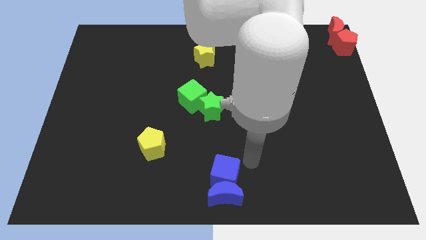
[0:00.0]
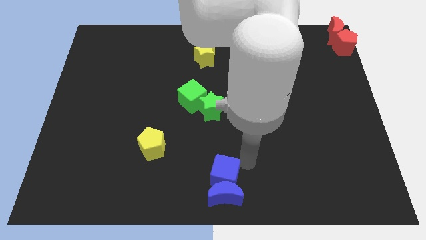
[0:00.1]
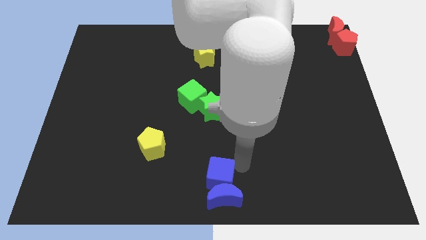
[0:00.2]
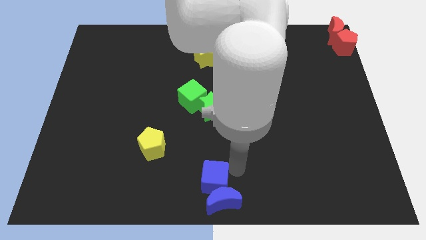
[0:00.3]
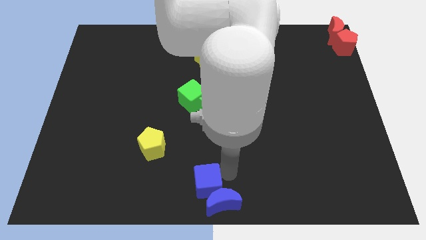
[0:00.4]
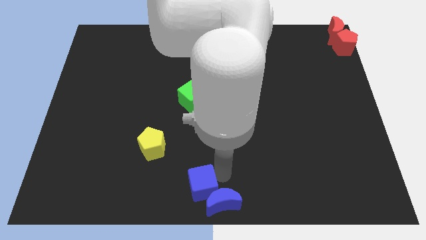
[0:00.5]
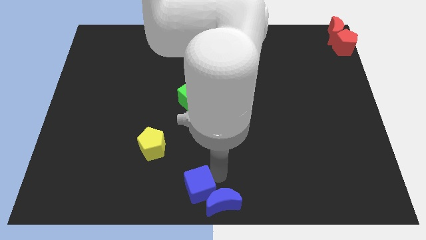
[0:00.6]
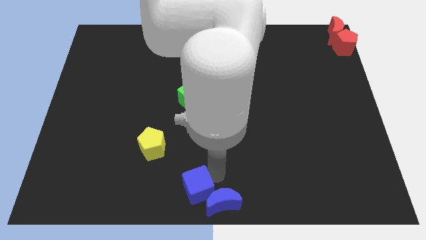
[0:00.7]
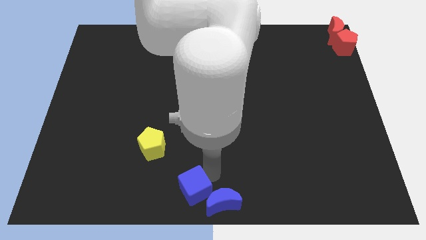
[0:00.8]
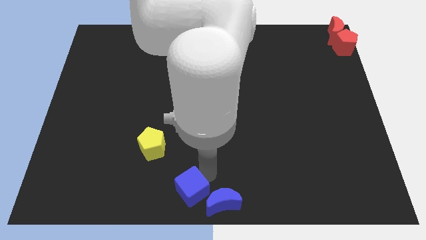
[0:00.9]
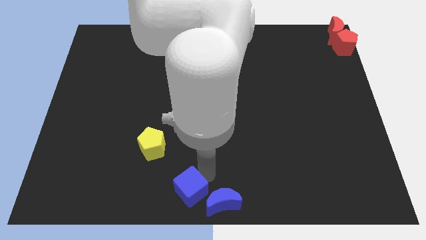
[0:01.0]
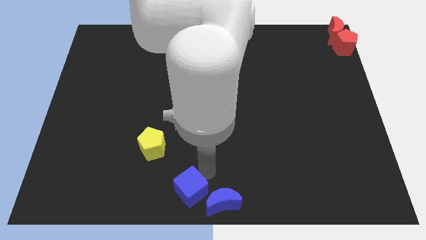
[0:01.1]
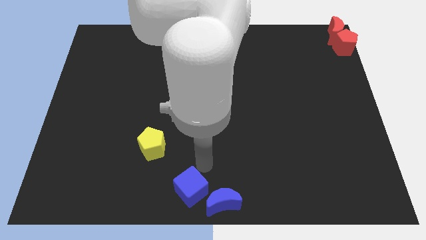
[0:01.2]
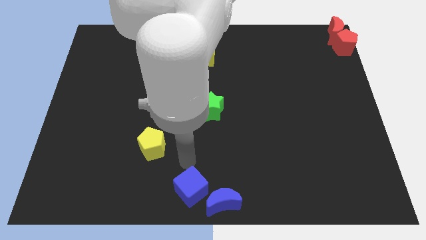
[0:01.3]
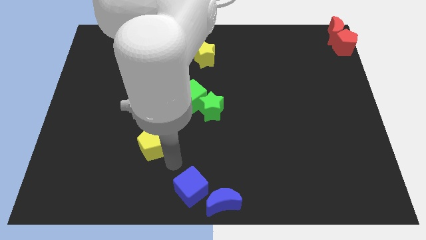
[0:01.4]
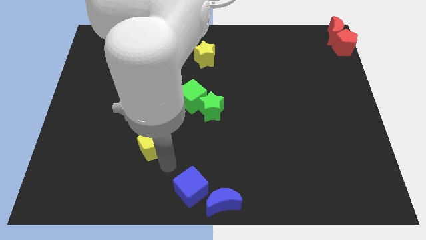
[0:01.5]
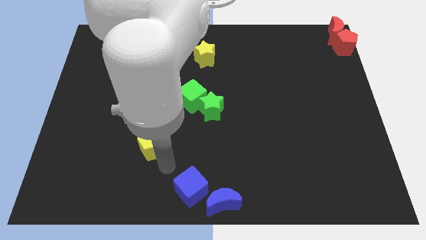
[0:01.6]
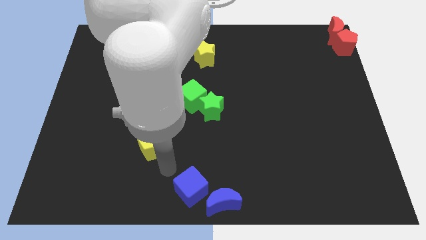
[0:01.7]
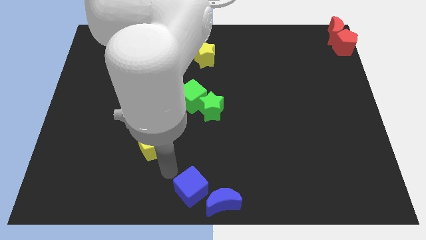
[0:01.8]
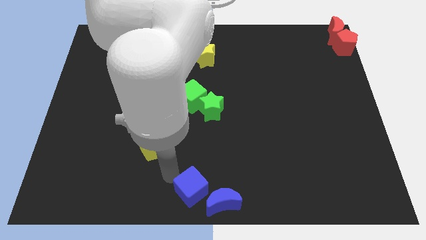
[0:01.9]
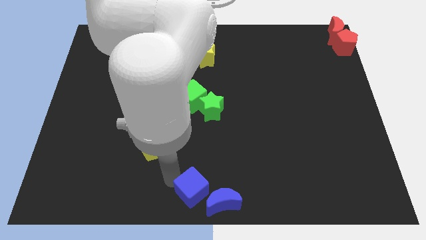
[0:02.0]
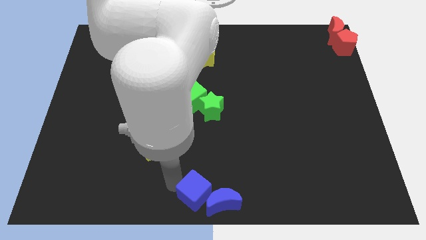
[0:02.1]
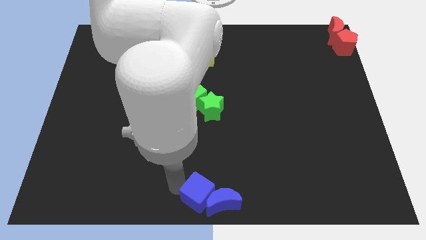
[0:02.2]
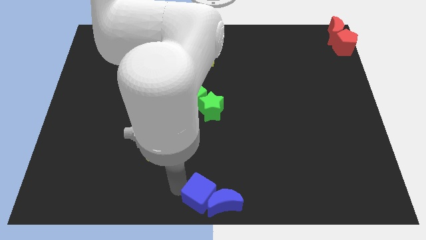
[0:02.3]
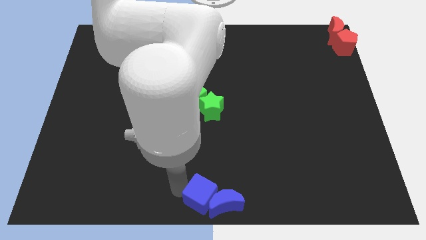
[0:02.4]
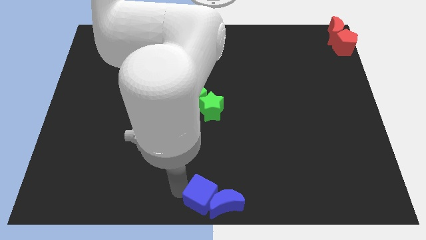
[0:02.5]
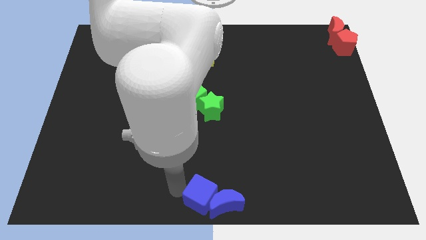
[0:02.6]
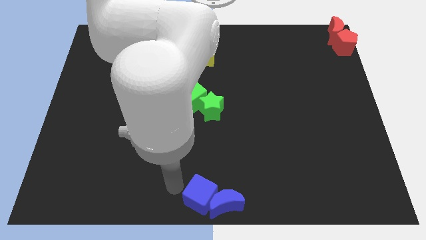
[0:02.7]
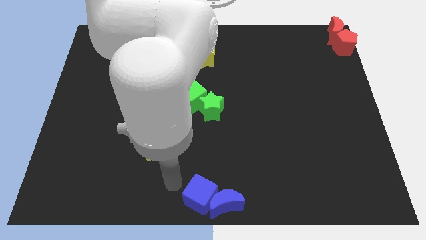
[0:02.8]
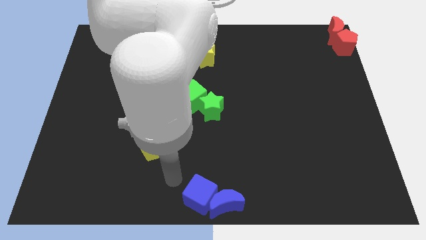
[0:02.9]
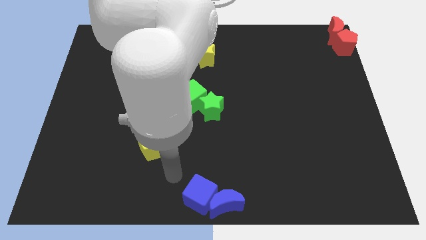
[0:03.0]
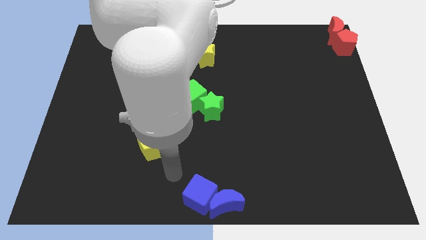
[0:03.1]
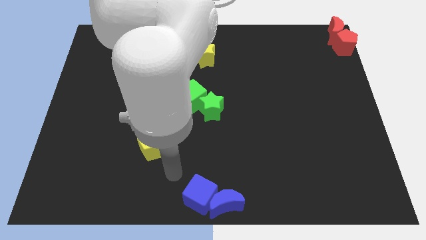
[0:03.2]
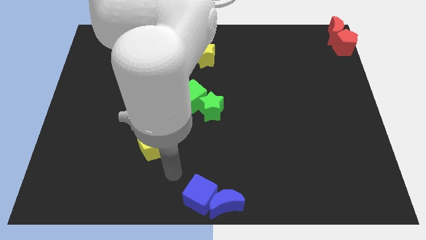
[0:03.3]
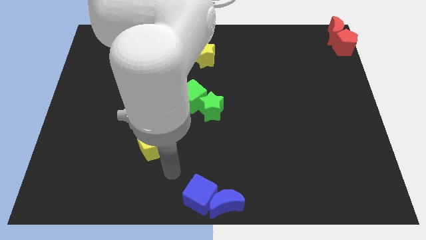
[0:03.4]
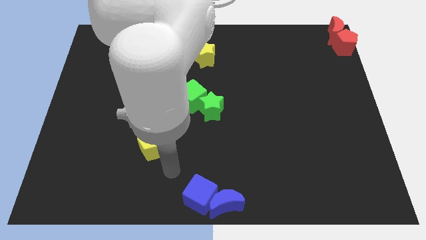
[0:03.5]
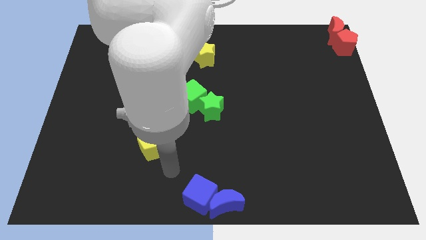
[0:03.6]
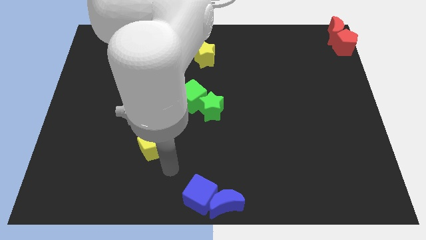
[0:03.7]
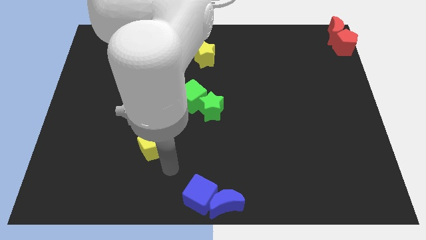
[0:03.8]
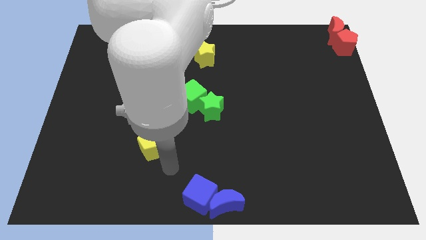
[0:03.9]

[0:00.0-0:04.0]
place blue cube beside blue moon

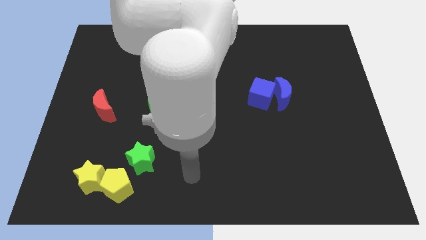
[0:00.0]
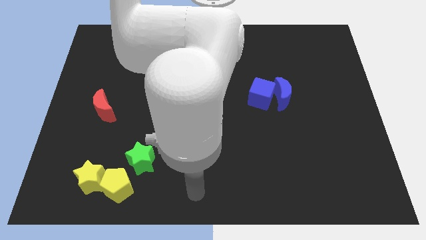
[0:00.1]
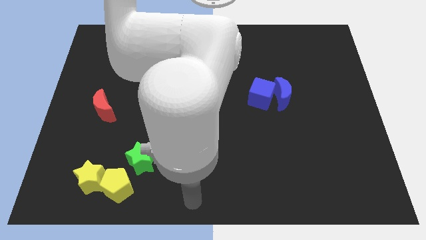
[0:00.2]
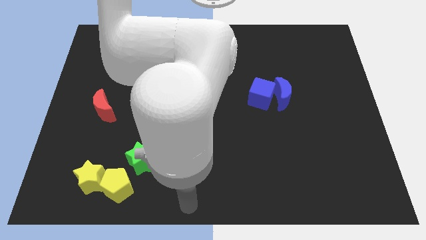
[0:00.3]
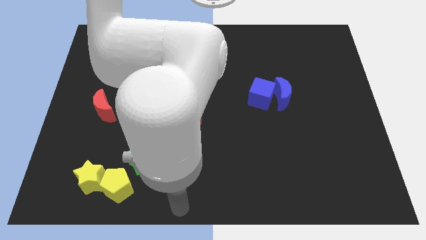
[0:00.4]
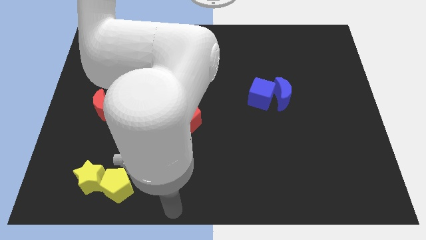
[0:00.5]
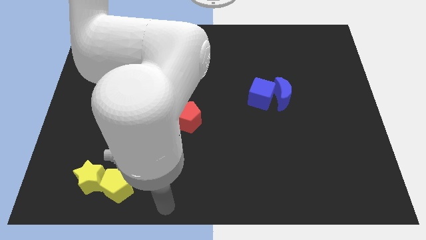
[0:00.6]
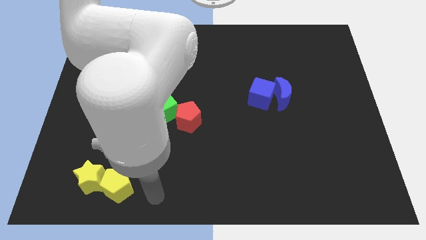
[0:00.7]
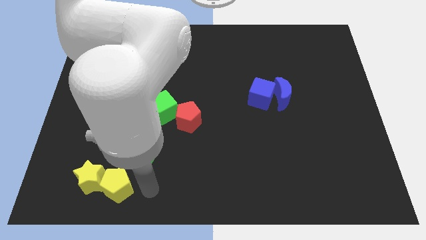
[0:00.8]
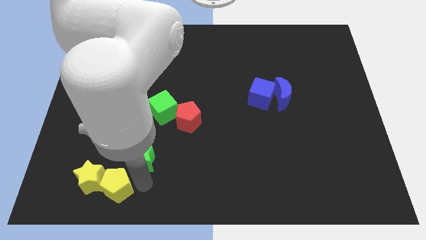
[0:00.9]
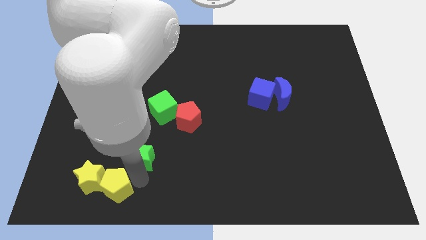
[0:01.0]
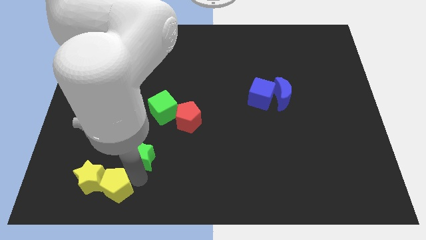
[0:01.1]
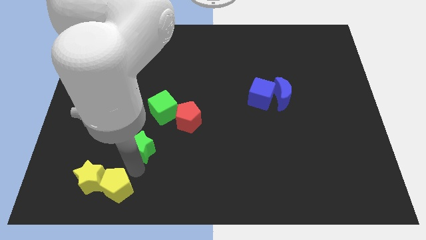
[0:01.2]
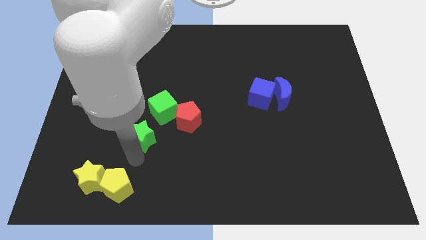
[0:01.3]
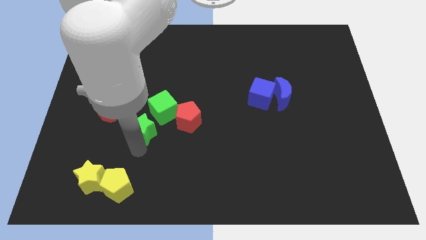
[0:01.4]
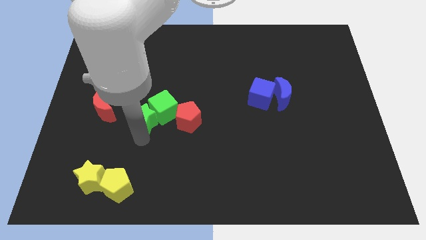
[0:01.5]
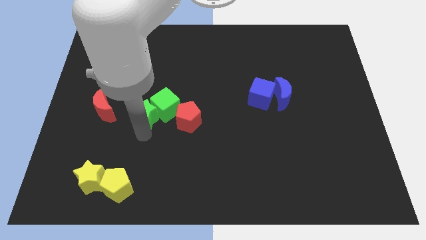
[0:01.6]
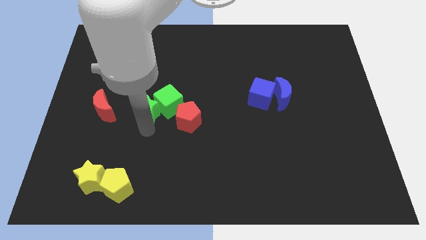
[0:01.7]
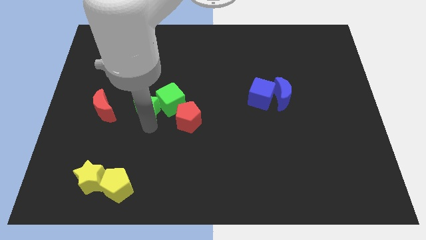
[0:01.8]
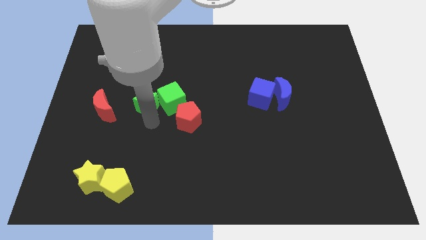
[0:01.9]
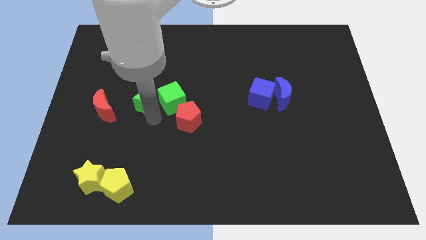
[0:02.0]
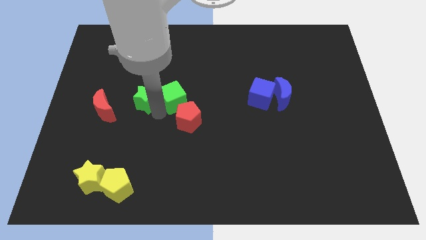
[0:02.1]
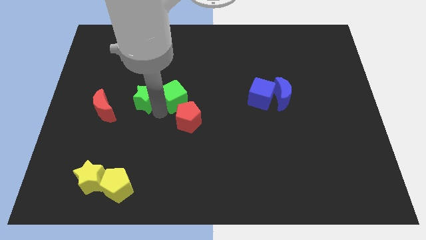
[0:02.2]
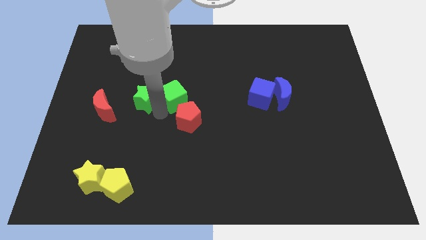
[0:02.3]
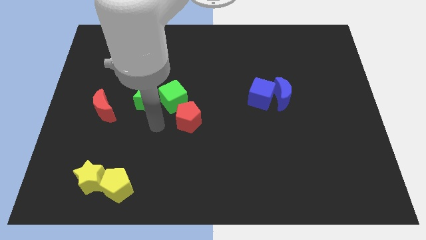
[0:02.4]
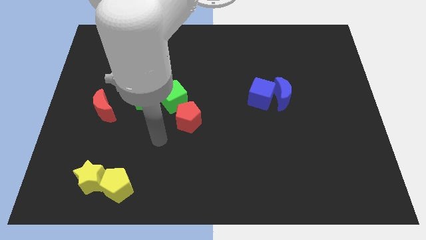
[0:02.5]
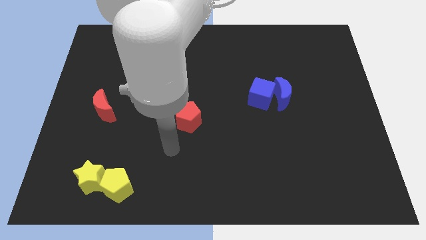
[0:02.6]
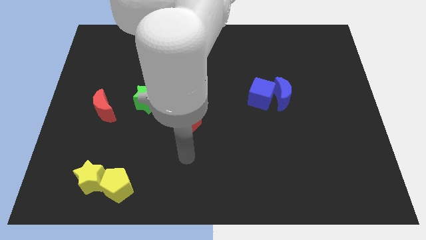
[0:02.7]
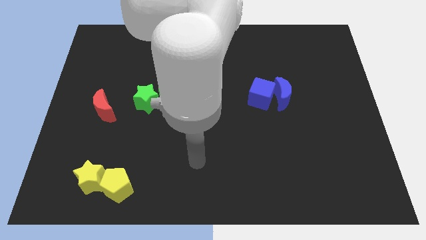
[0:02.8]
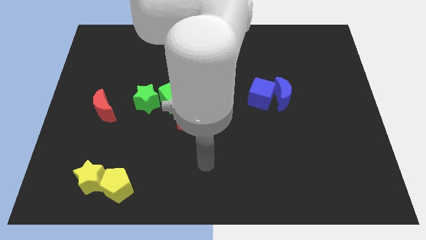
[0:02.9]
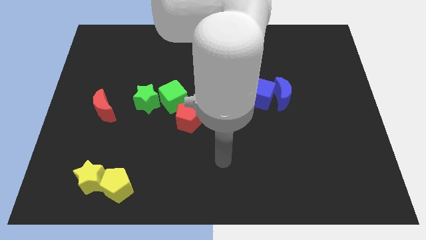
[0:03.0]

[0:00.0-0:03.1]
push the green star into the green cube

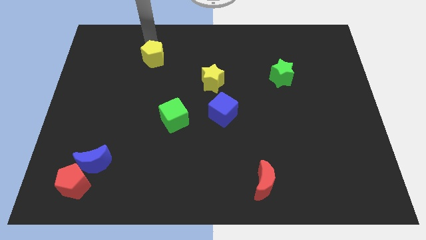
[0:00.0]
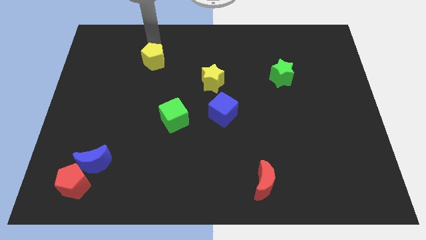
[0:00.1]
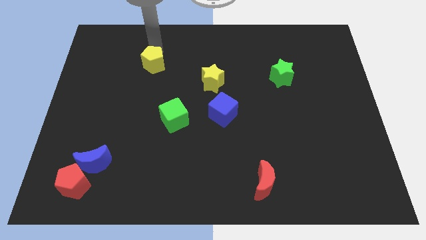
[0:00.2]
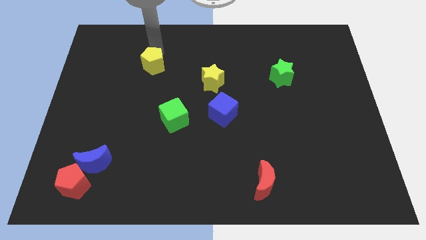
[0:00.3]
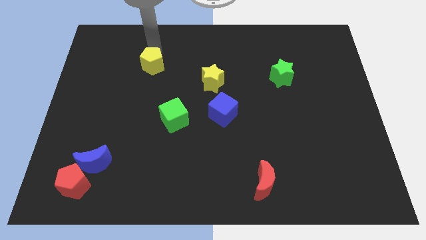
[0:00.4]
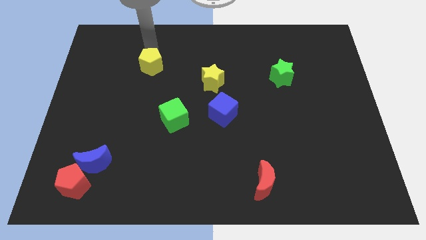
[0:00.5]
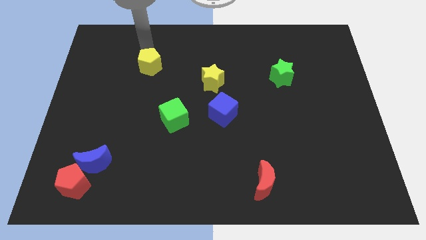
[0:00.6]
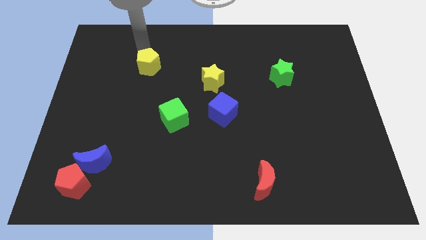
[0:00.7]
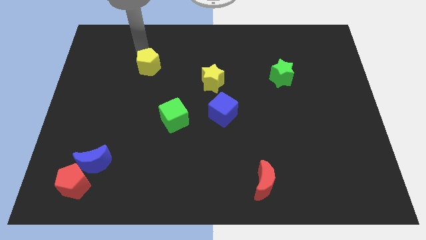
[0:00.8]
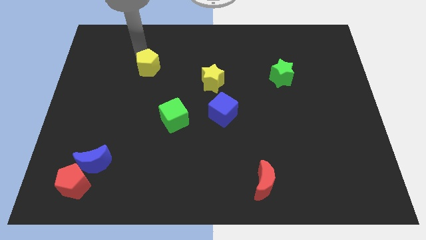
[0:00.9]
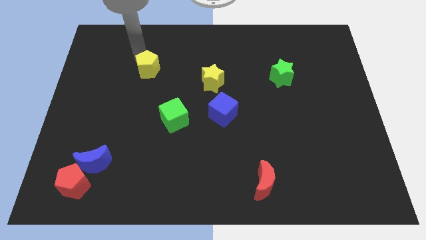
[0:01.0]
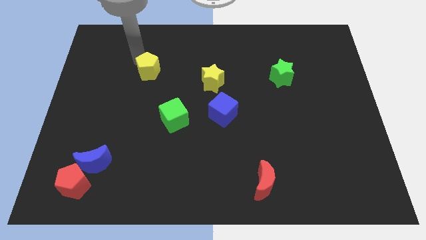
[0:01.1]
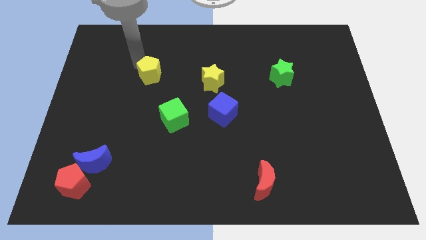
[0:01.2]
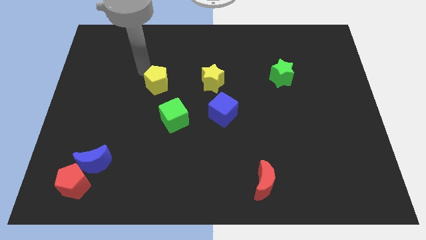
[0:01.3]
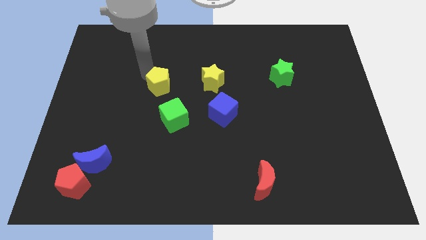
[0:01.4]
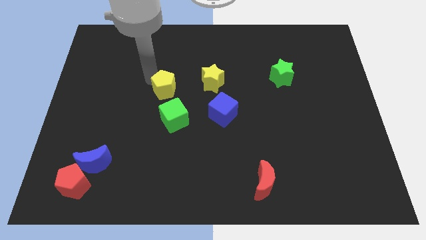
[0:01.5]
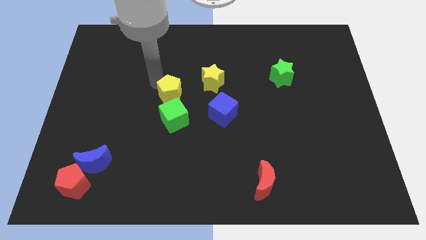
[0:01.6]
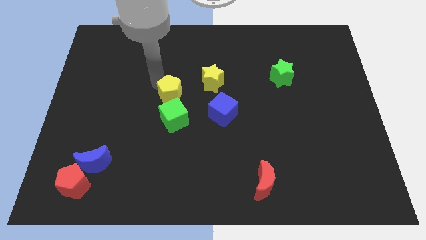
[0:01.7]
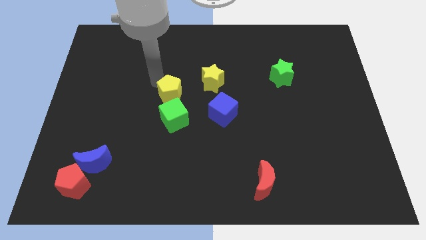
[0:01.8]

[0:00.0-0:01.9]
move the yellow pentagon towards the top of the green cube
